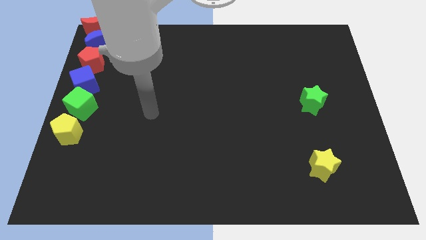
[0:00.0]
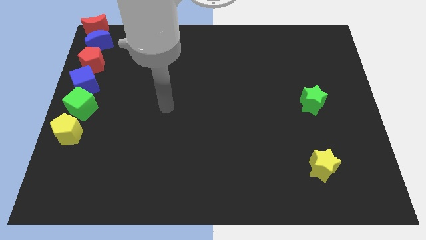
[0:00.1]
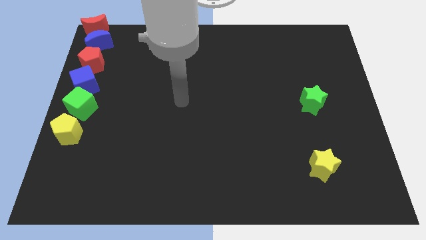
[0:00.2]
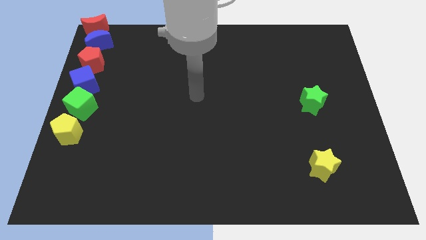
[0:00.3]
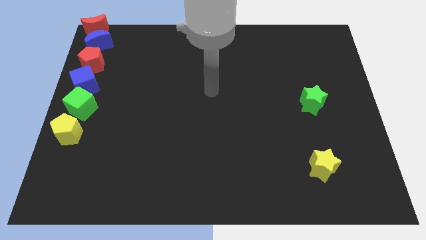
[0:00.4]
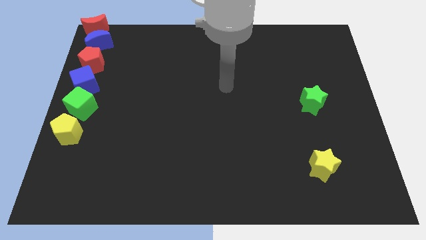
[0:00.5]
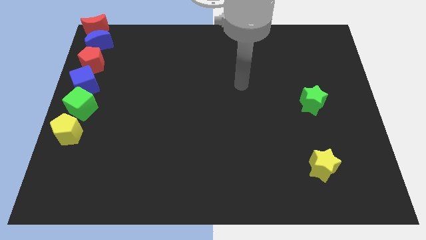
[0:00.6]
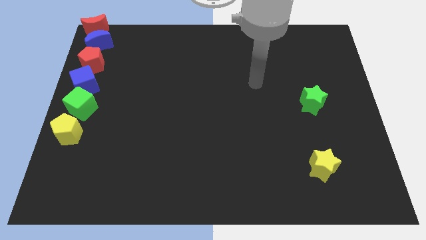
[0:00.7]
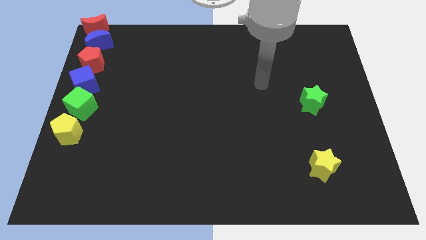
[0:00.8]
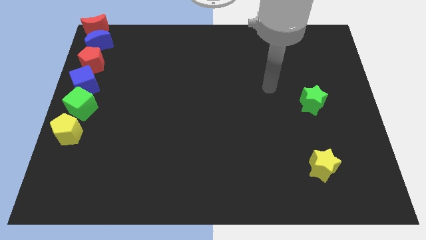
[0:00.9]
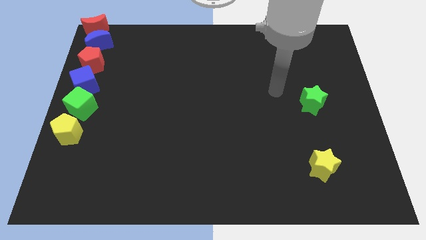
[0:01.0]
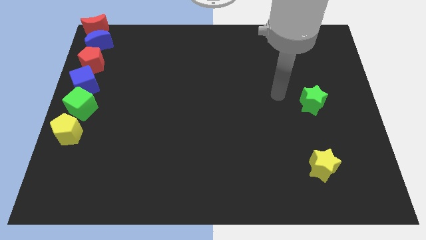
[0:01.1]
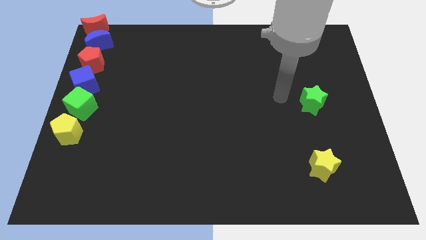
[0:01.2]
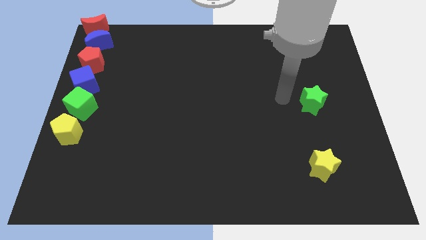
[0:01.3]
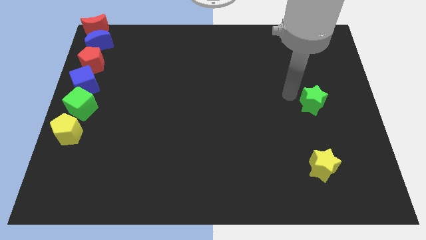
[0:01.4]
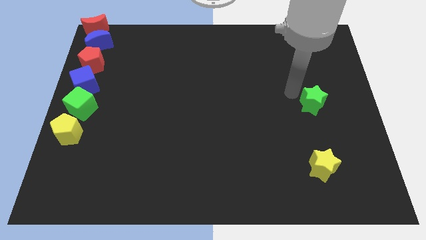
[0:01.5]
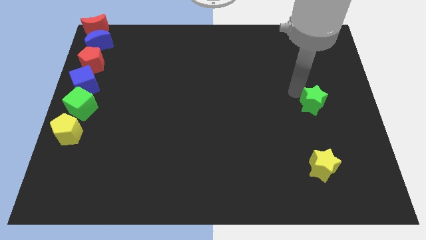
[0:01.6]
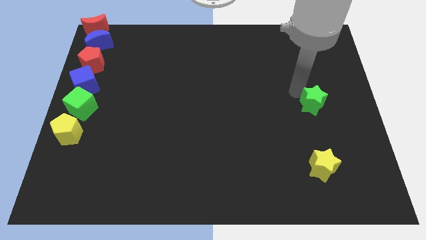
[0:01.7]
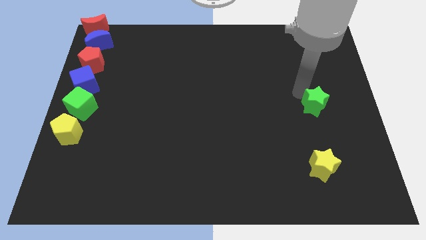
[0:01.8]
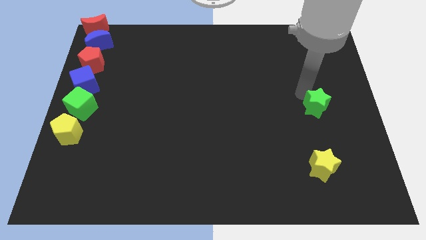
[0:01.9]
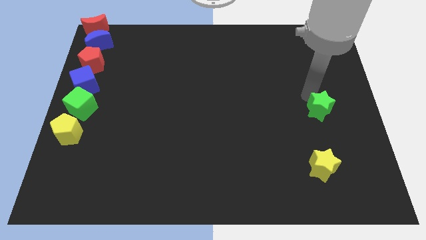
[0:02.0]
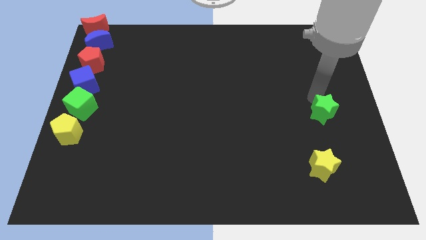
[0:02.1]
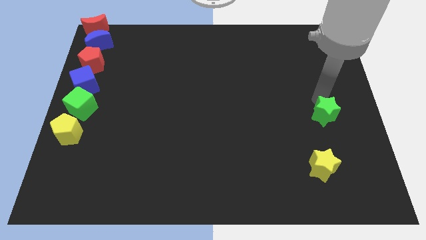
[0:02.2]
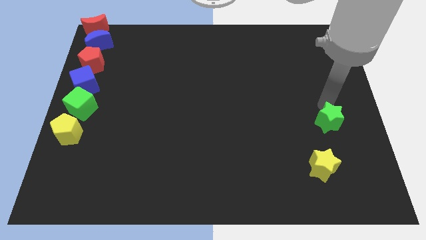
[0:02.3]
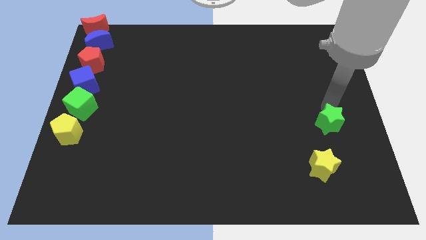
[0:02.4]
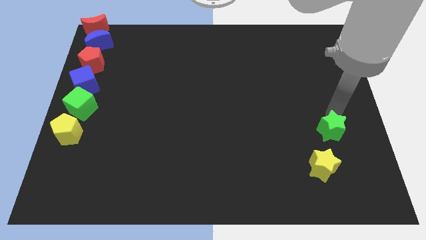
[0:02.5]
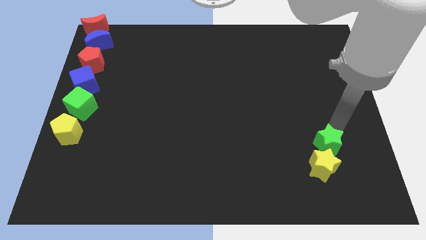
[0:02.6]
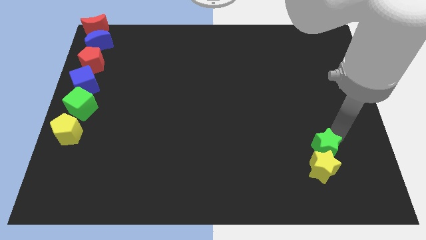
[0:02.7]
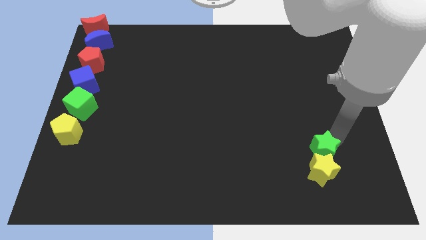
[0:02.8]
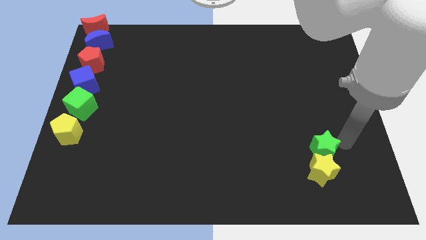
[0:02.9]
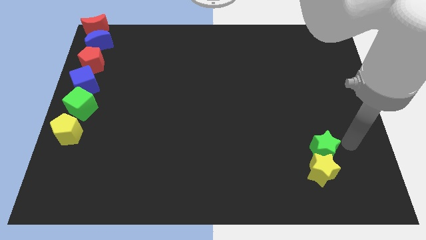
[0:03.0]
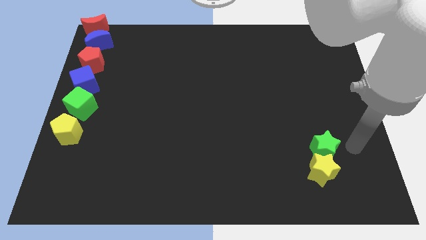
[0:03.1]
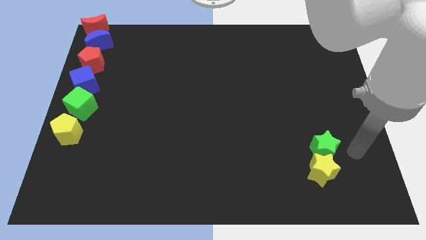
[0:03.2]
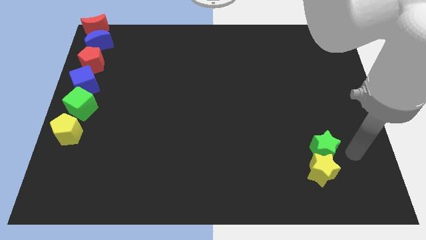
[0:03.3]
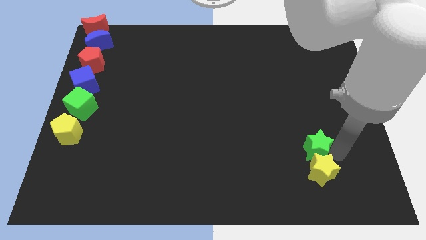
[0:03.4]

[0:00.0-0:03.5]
push green star into yellow star

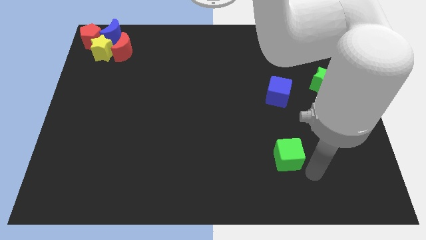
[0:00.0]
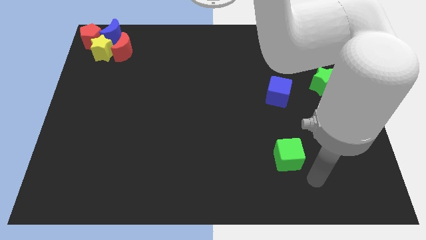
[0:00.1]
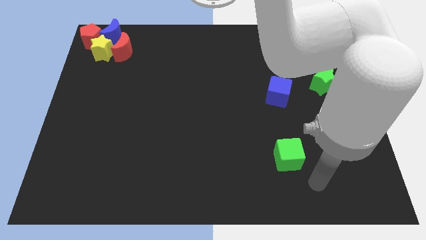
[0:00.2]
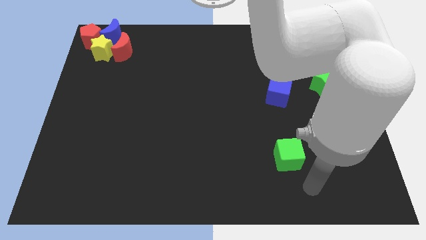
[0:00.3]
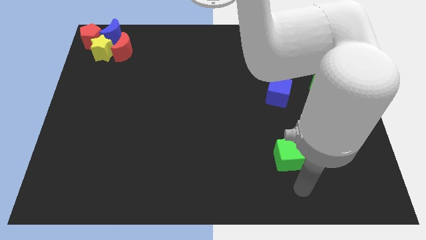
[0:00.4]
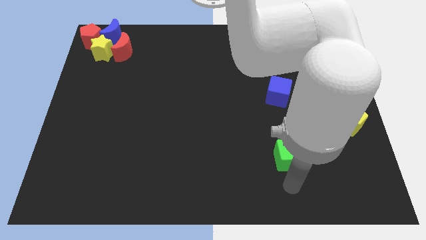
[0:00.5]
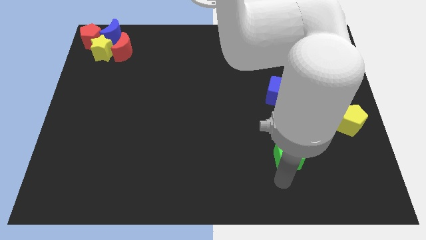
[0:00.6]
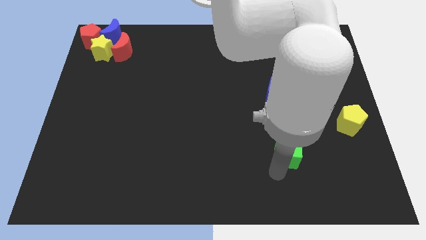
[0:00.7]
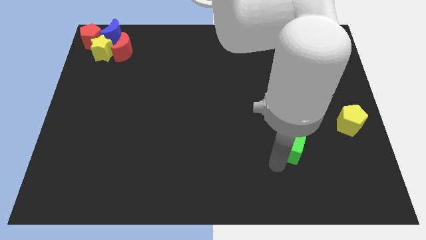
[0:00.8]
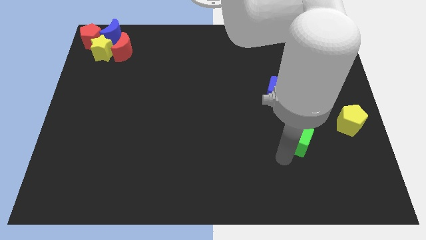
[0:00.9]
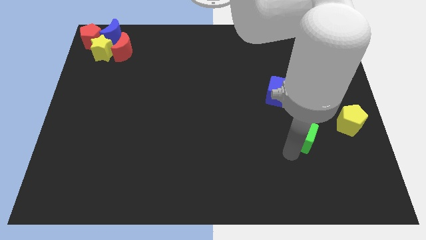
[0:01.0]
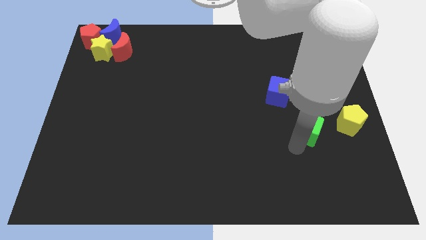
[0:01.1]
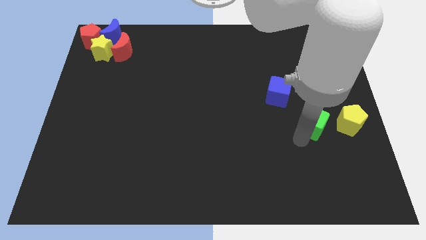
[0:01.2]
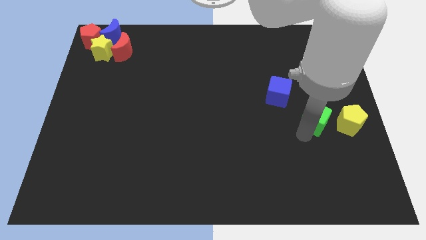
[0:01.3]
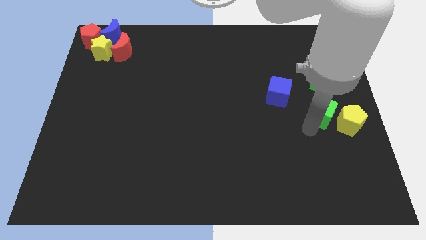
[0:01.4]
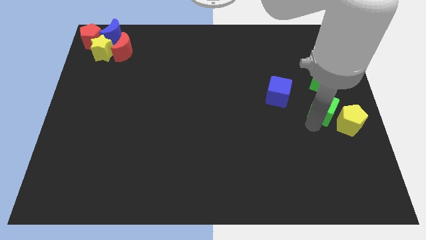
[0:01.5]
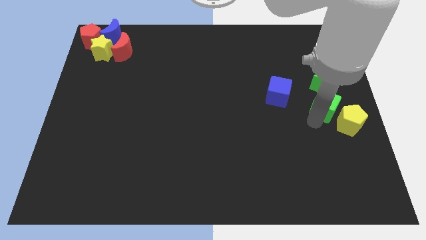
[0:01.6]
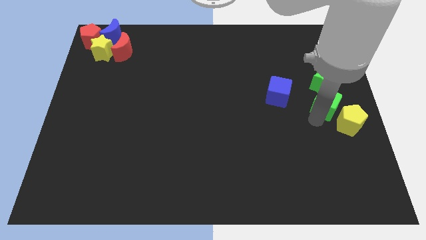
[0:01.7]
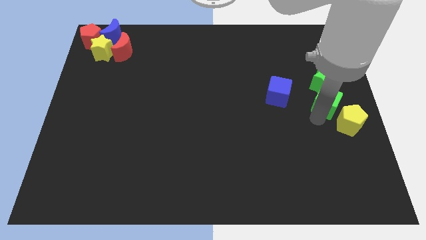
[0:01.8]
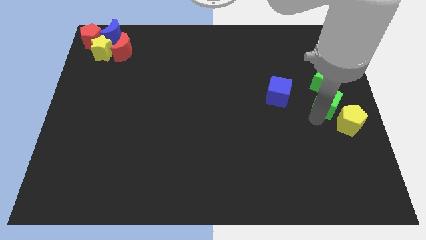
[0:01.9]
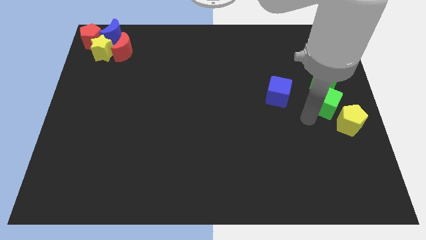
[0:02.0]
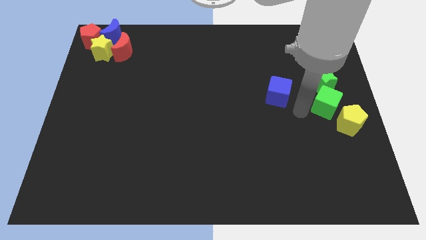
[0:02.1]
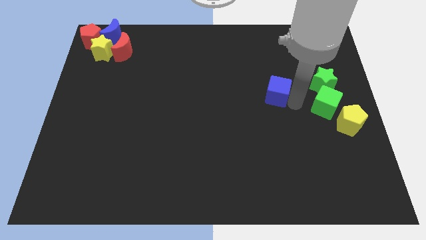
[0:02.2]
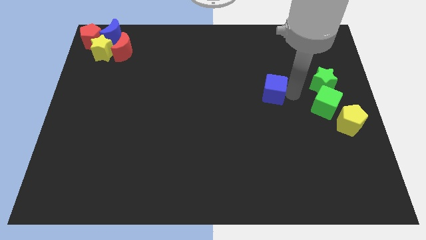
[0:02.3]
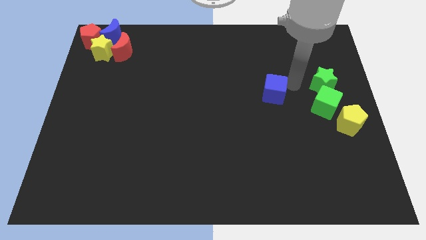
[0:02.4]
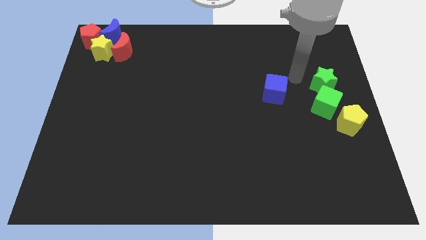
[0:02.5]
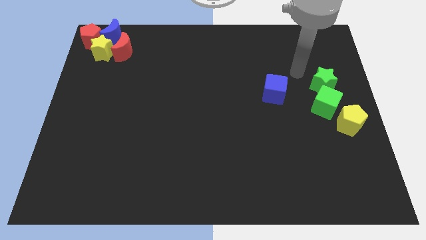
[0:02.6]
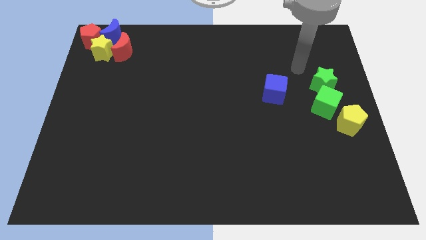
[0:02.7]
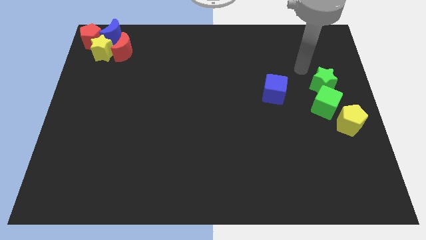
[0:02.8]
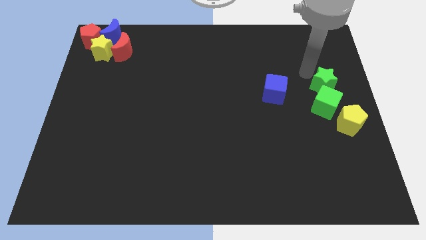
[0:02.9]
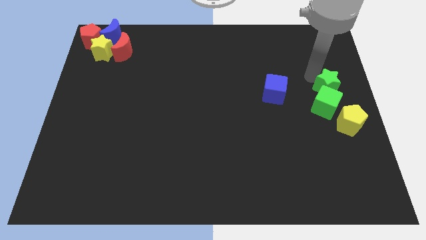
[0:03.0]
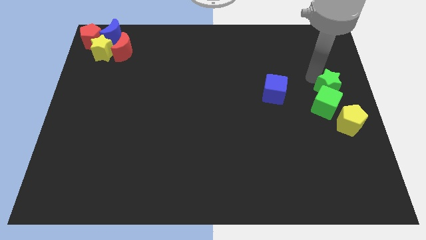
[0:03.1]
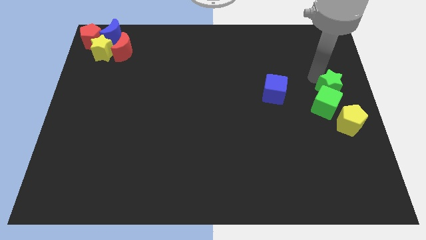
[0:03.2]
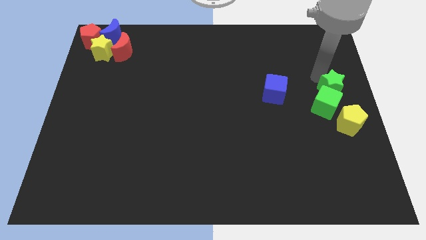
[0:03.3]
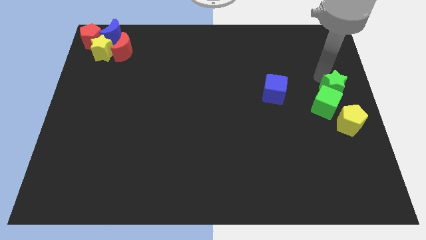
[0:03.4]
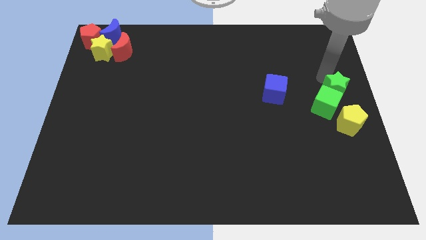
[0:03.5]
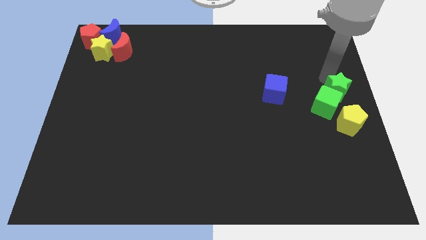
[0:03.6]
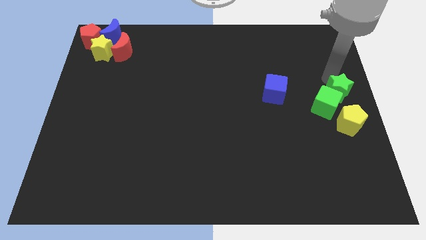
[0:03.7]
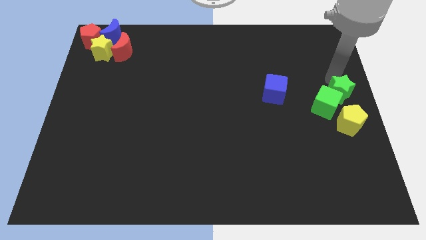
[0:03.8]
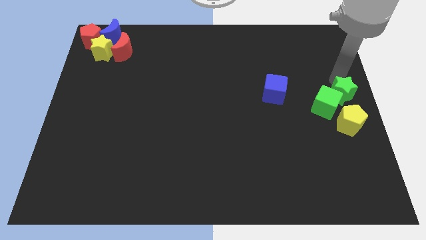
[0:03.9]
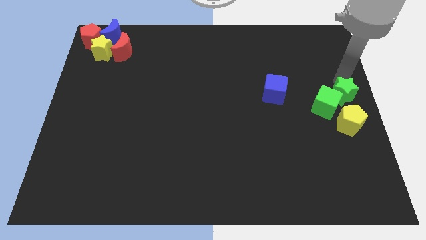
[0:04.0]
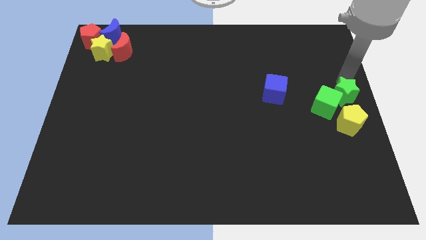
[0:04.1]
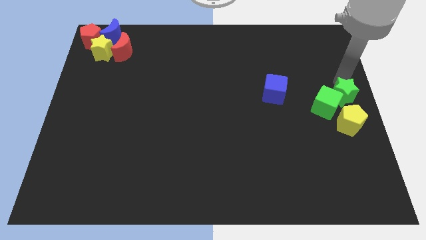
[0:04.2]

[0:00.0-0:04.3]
push green cube into the green star

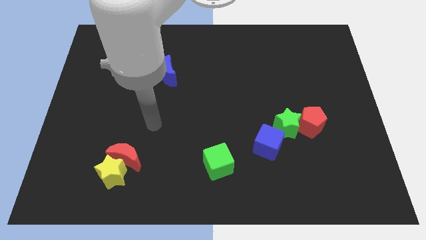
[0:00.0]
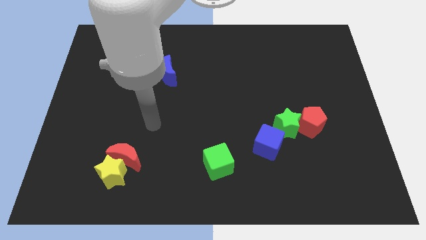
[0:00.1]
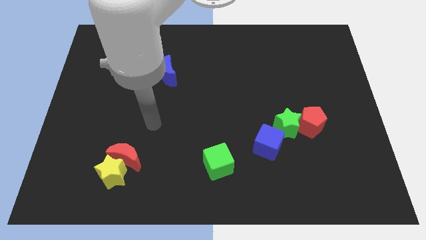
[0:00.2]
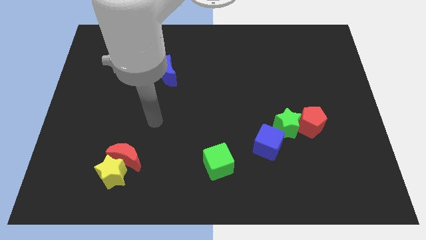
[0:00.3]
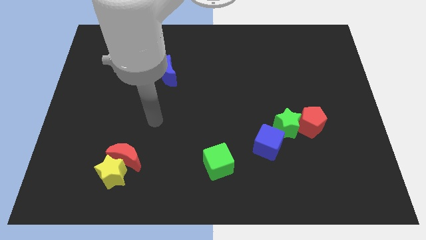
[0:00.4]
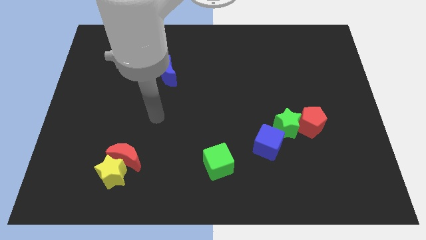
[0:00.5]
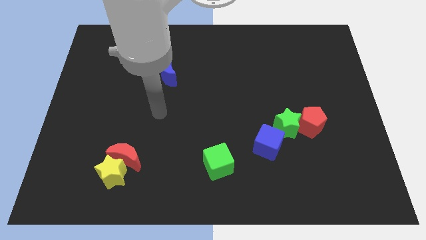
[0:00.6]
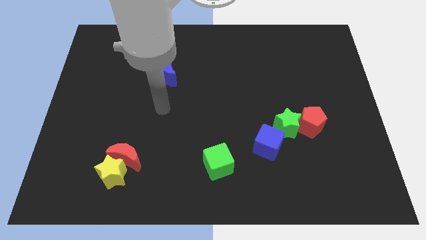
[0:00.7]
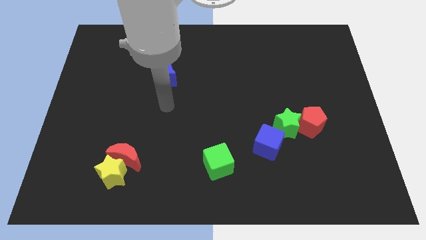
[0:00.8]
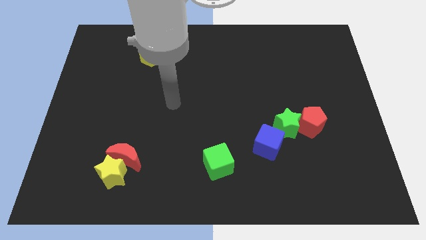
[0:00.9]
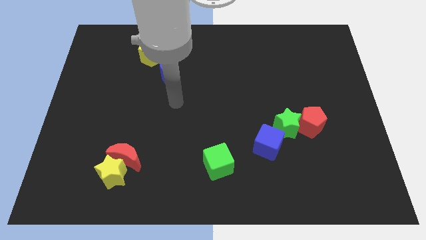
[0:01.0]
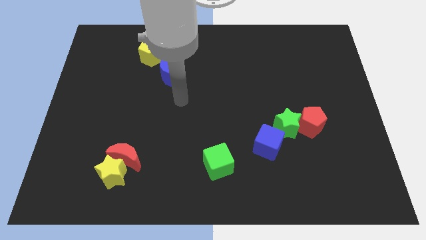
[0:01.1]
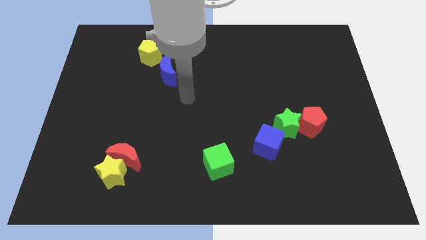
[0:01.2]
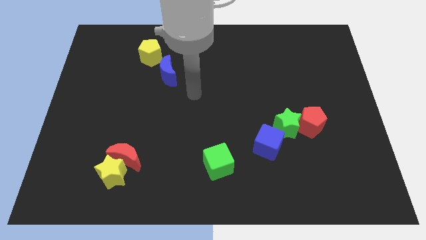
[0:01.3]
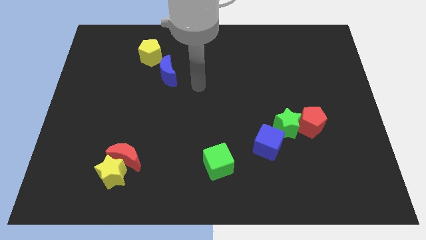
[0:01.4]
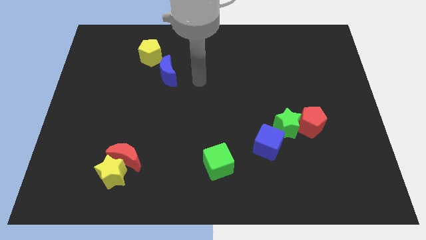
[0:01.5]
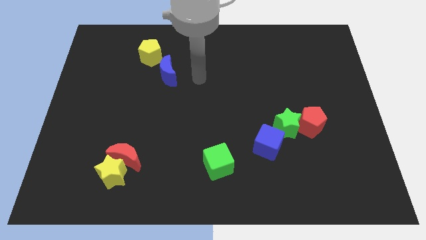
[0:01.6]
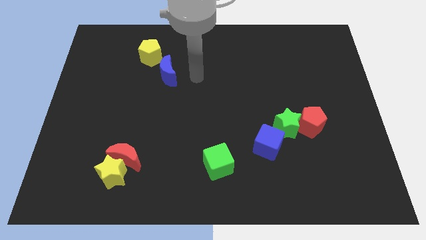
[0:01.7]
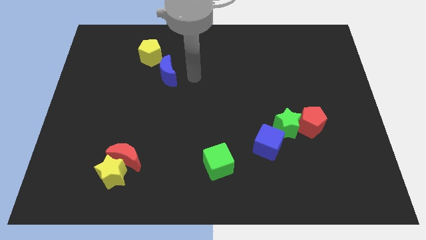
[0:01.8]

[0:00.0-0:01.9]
point the arm to the right of the blue moon
